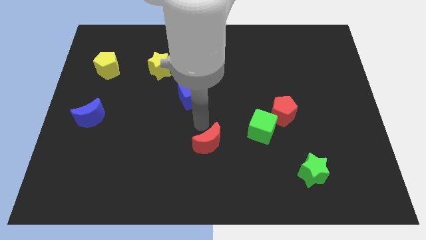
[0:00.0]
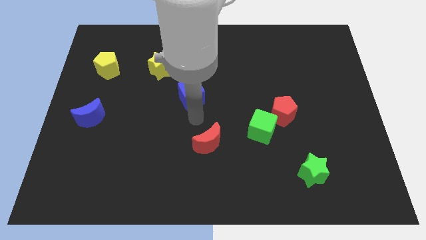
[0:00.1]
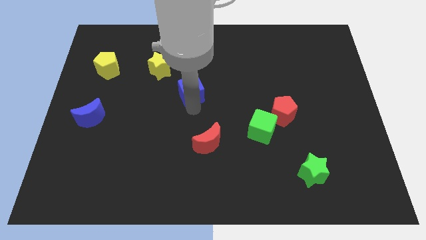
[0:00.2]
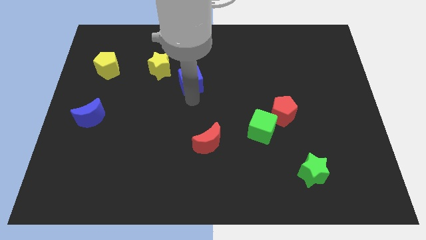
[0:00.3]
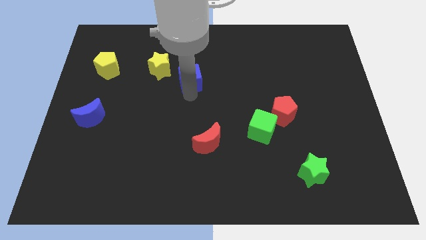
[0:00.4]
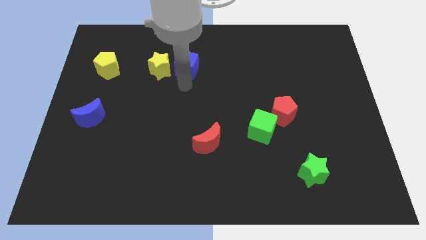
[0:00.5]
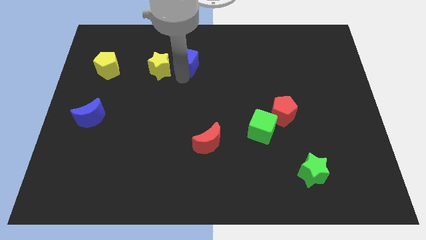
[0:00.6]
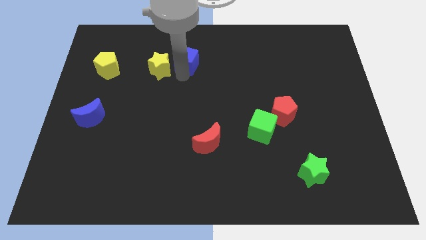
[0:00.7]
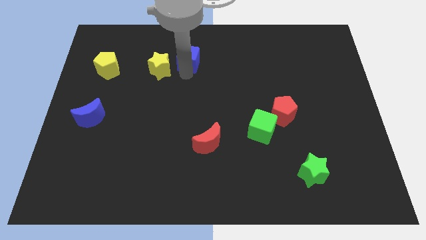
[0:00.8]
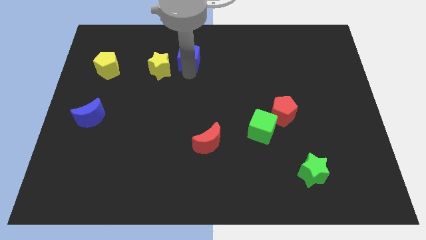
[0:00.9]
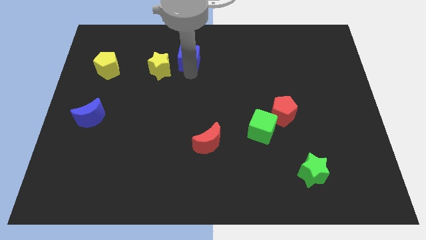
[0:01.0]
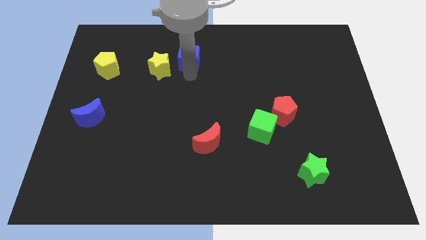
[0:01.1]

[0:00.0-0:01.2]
put the blue cube parallel right to the yellow star

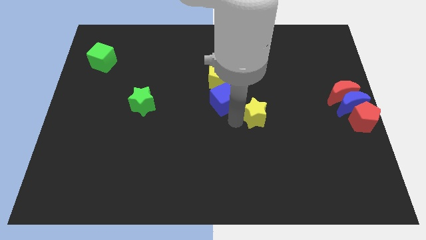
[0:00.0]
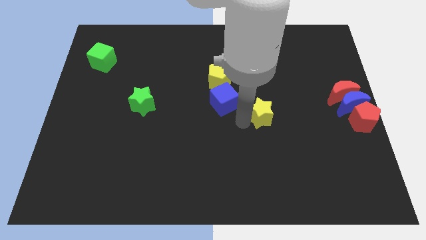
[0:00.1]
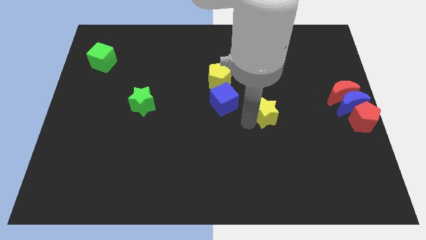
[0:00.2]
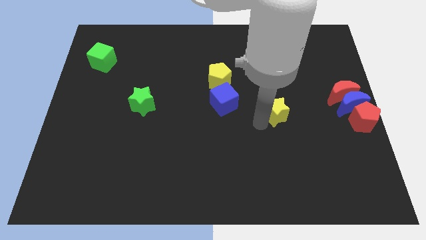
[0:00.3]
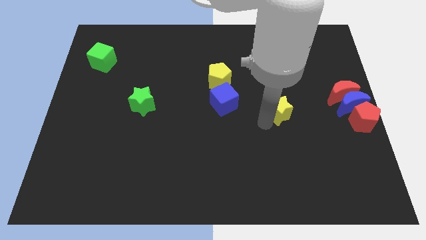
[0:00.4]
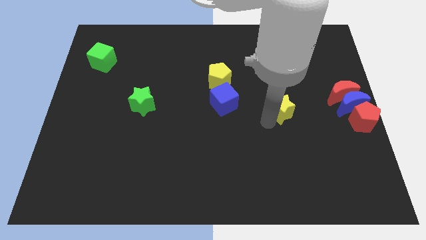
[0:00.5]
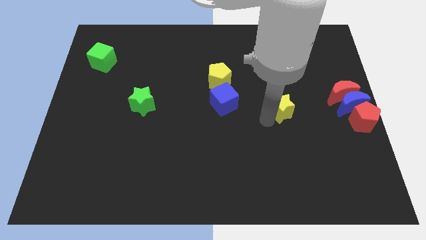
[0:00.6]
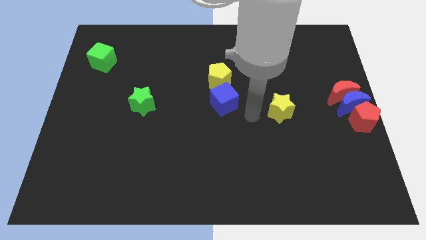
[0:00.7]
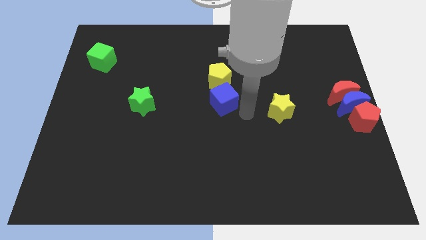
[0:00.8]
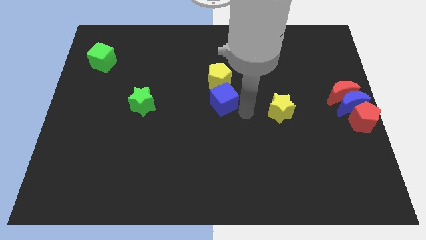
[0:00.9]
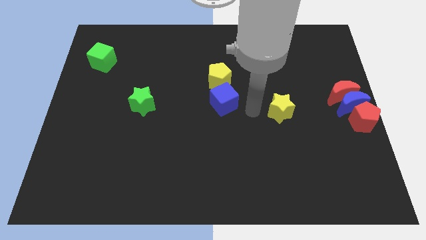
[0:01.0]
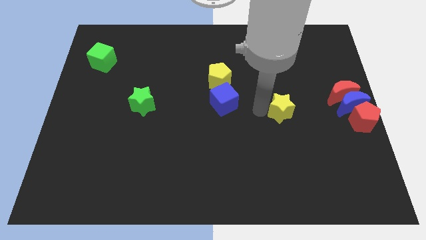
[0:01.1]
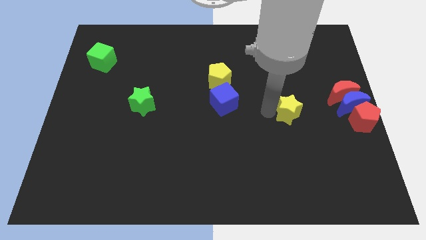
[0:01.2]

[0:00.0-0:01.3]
put the yellow star in between the blue blocks

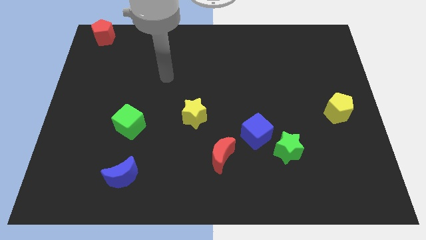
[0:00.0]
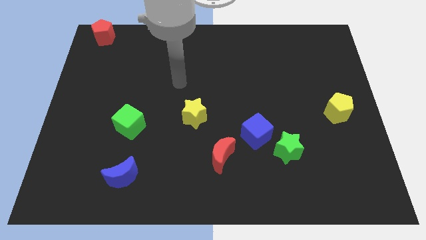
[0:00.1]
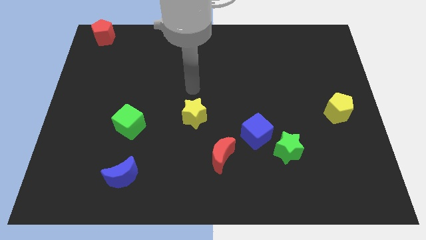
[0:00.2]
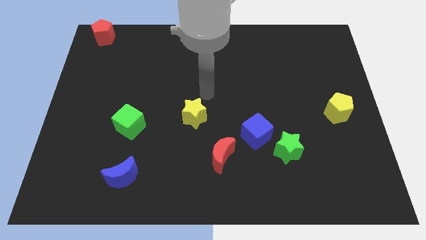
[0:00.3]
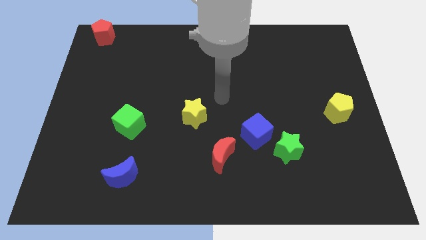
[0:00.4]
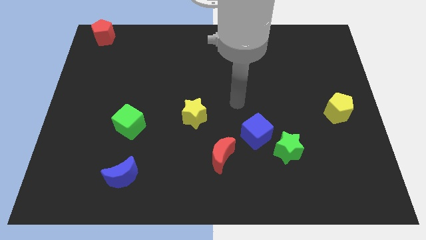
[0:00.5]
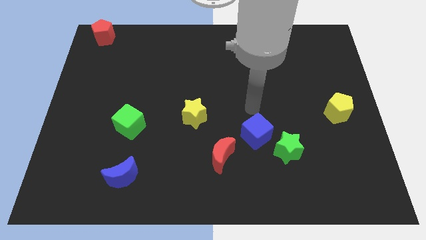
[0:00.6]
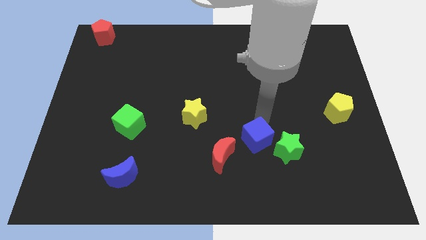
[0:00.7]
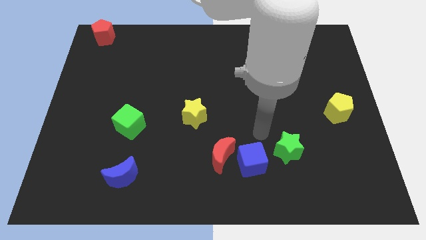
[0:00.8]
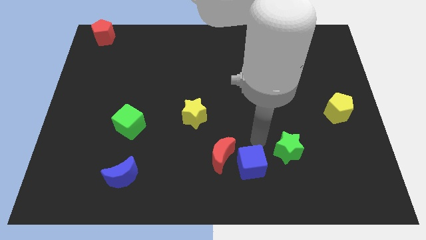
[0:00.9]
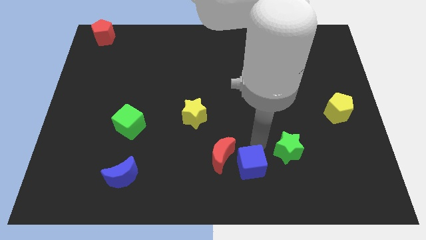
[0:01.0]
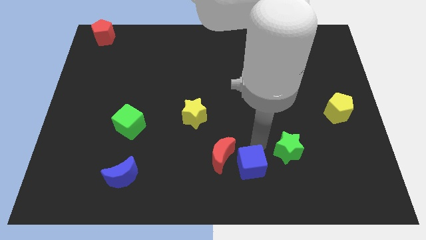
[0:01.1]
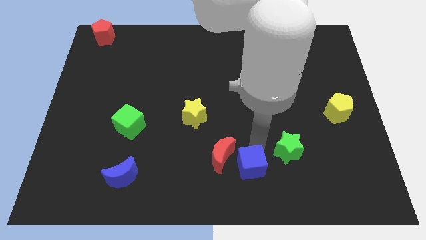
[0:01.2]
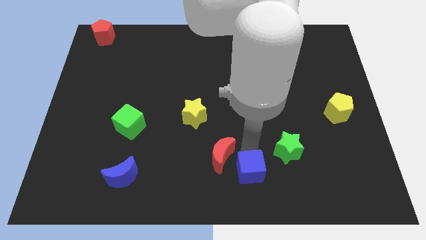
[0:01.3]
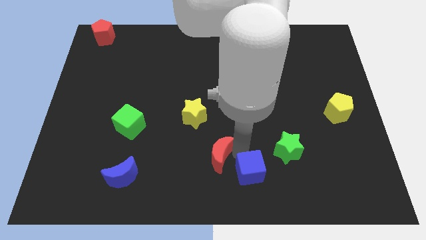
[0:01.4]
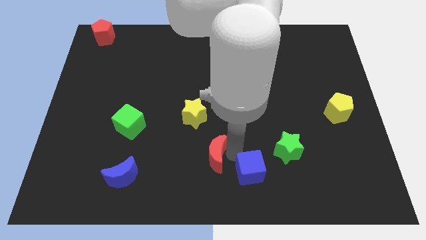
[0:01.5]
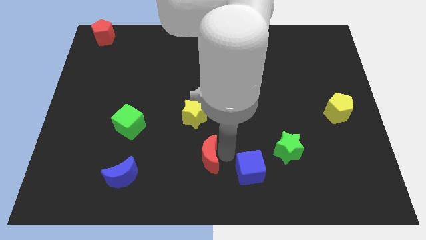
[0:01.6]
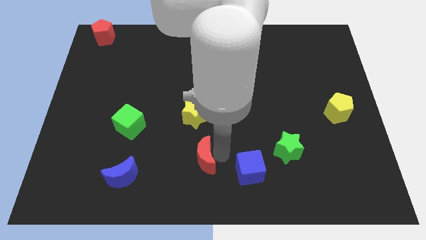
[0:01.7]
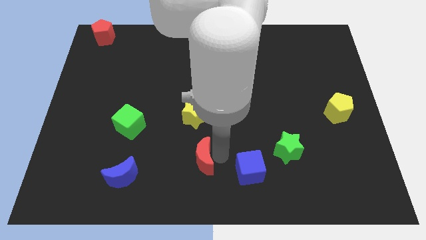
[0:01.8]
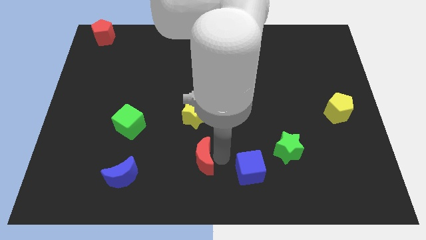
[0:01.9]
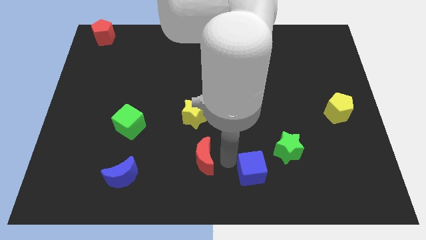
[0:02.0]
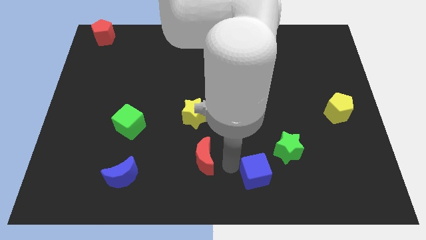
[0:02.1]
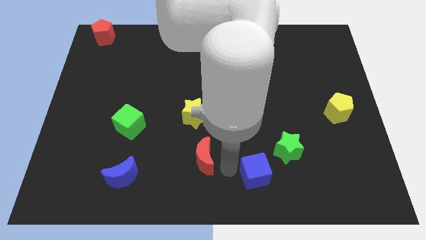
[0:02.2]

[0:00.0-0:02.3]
push the blue cube down slightly towards the bottom center

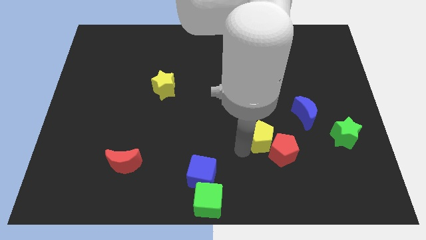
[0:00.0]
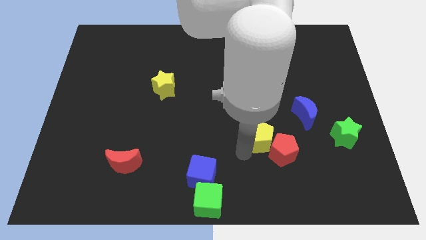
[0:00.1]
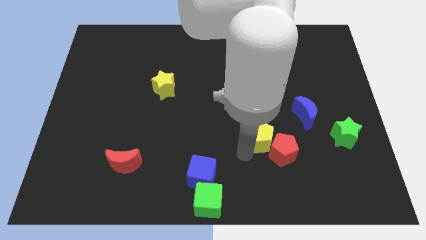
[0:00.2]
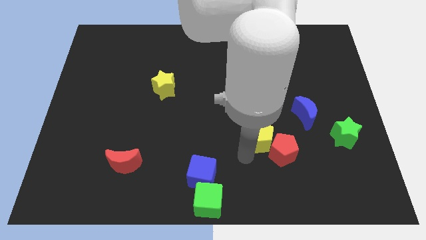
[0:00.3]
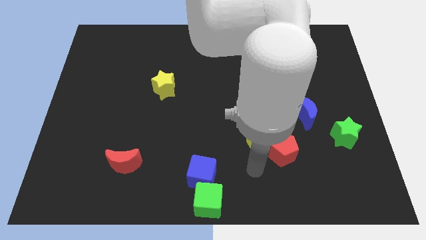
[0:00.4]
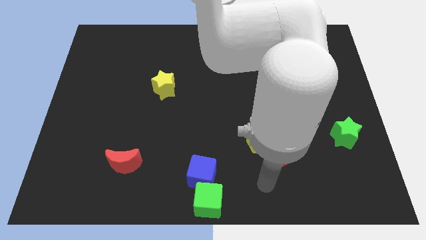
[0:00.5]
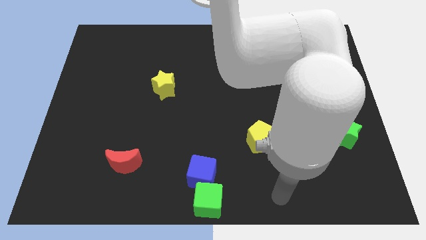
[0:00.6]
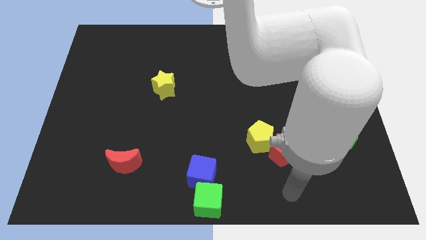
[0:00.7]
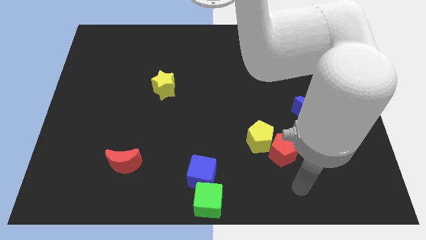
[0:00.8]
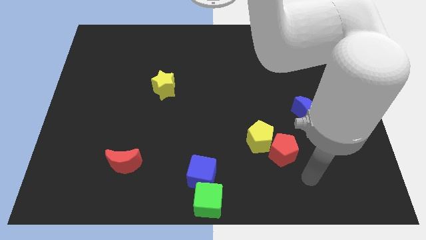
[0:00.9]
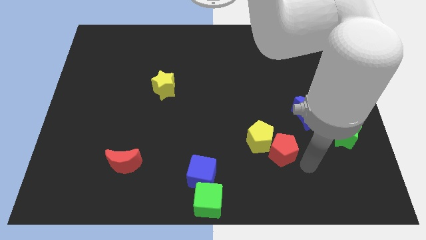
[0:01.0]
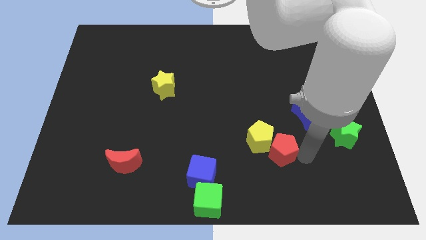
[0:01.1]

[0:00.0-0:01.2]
move your arm to the right of the red pentagon

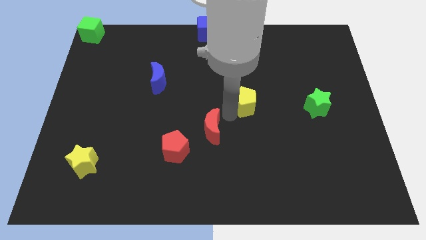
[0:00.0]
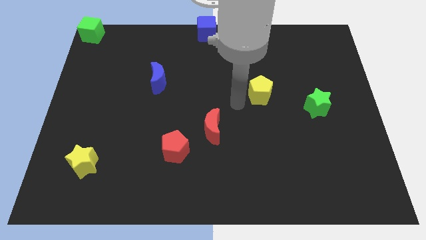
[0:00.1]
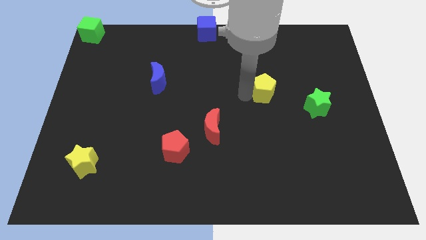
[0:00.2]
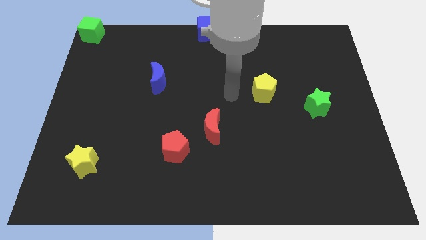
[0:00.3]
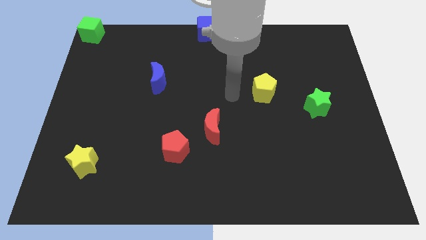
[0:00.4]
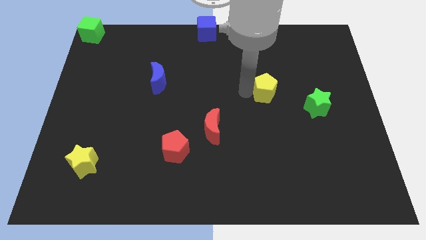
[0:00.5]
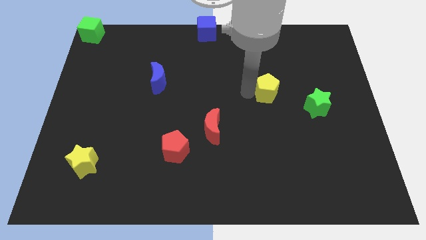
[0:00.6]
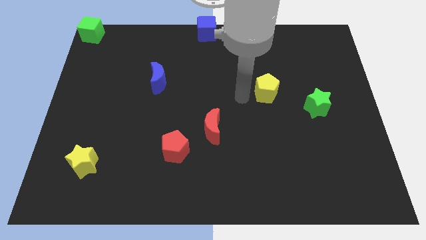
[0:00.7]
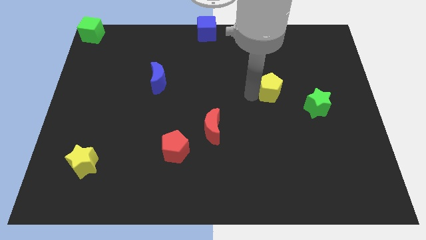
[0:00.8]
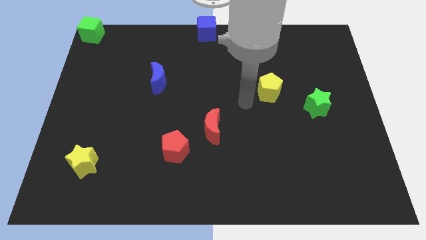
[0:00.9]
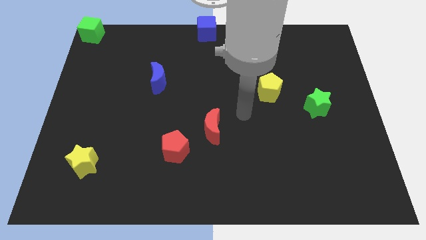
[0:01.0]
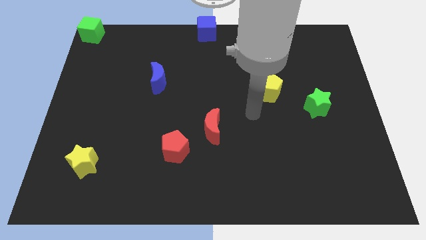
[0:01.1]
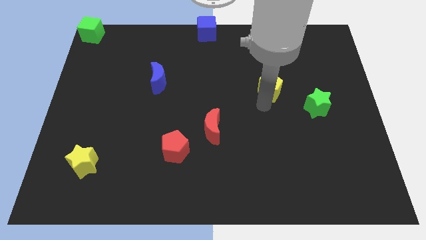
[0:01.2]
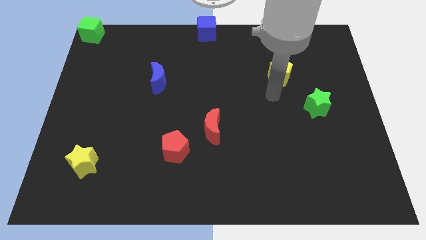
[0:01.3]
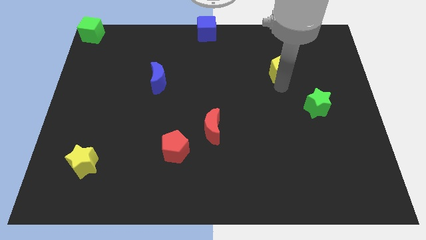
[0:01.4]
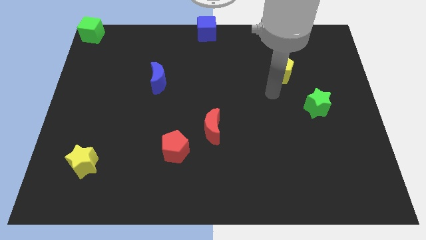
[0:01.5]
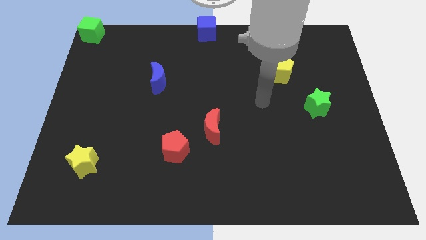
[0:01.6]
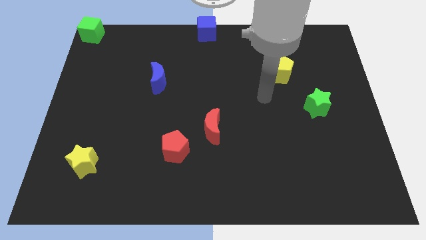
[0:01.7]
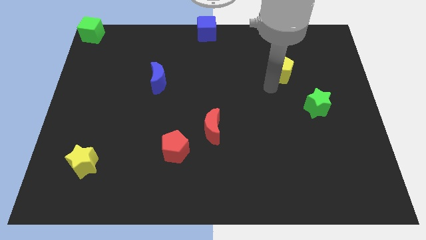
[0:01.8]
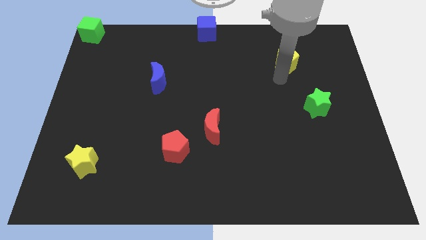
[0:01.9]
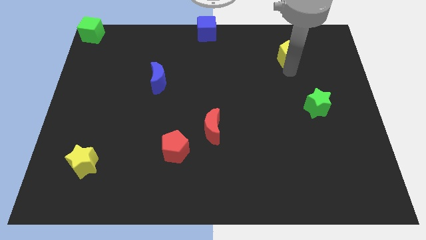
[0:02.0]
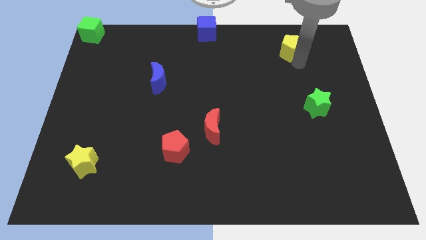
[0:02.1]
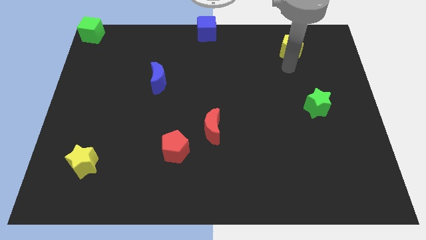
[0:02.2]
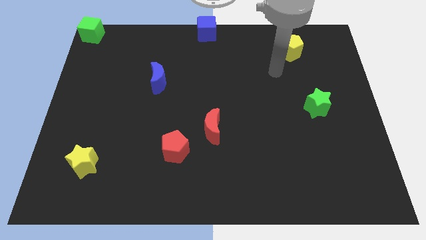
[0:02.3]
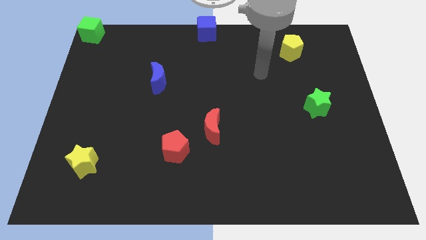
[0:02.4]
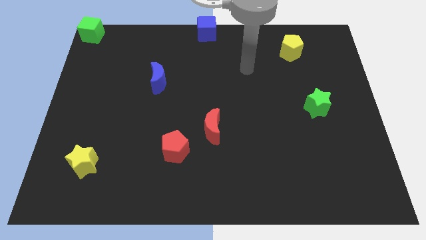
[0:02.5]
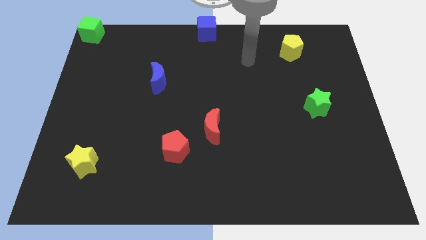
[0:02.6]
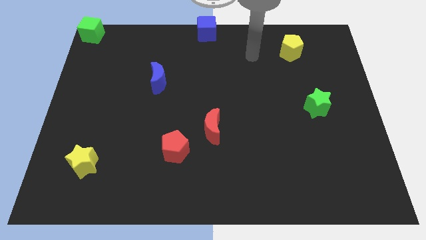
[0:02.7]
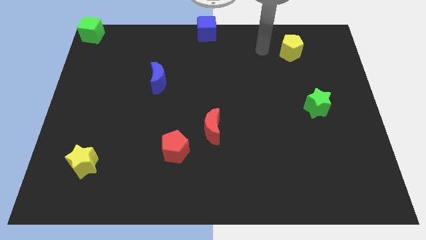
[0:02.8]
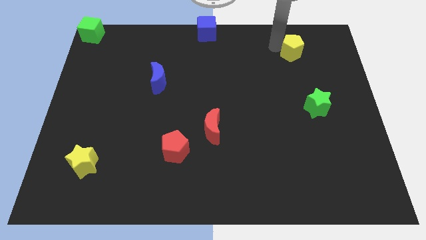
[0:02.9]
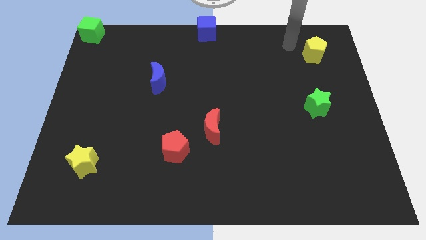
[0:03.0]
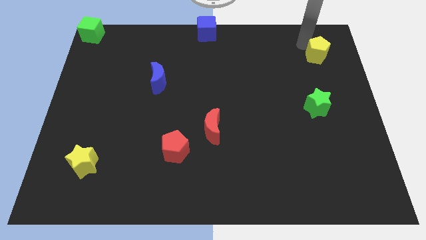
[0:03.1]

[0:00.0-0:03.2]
move the yellow pentagon to the top of the green star
